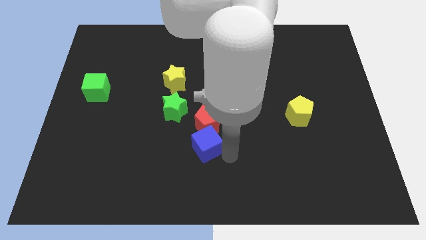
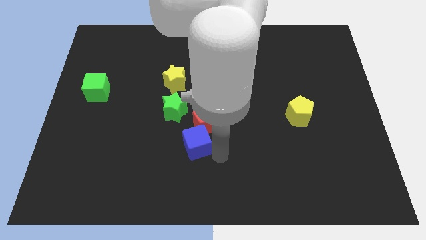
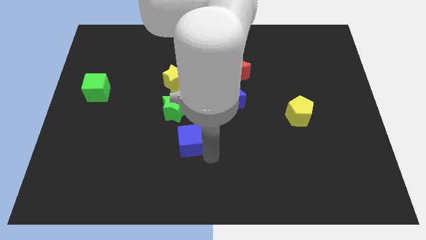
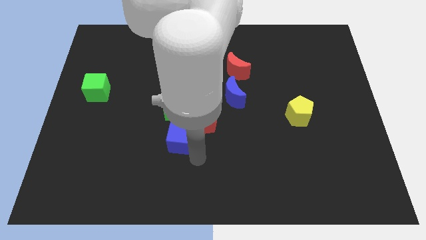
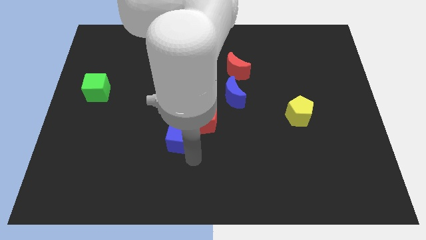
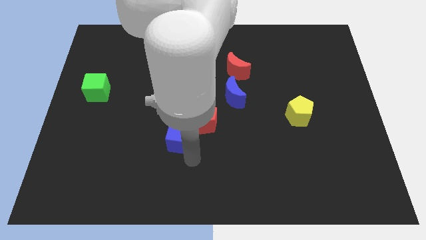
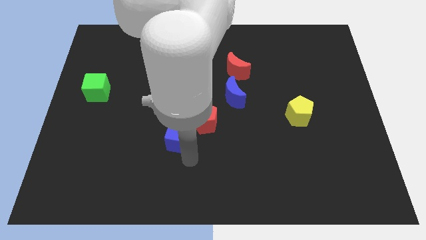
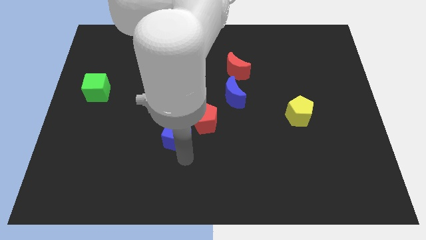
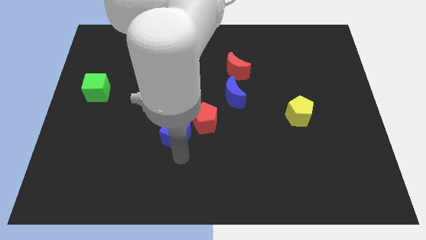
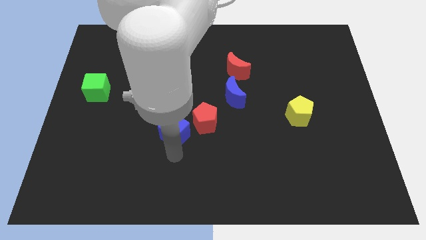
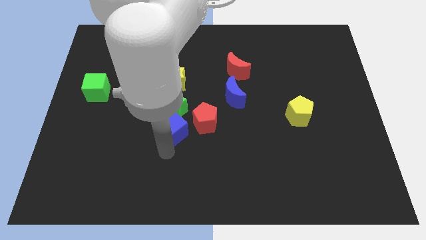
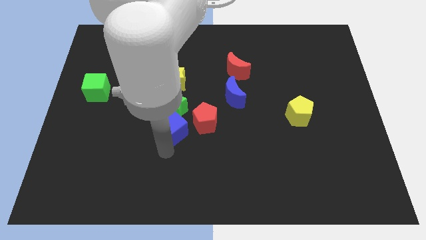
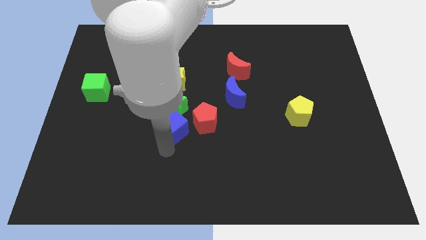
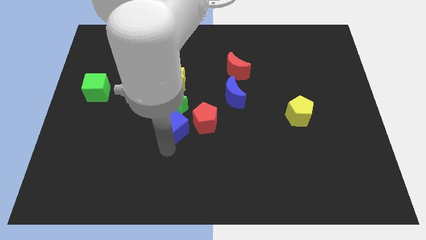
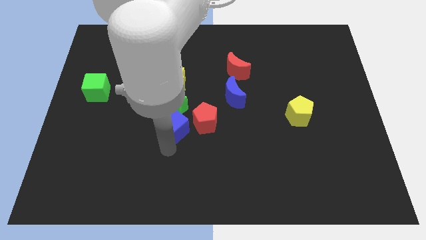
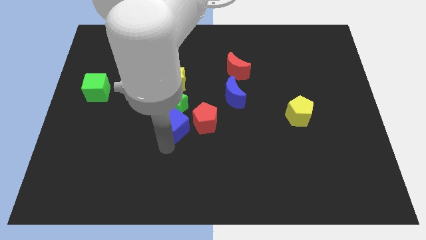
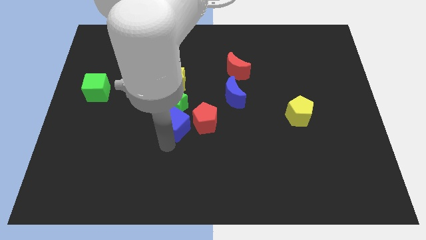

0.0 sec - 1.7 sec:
push the blue cube into the green star

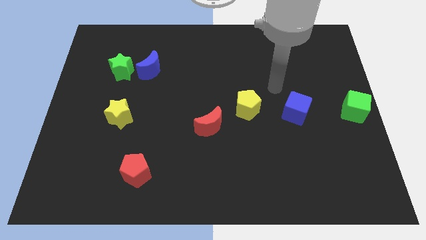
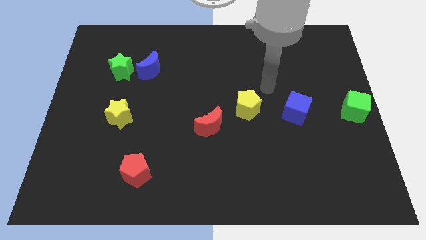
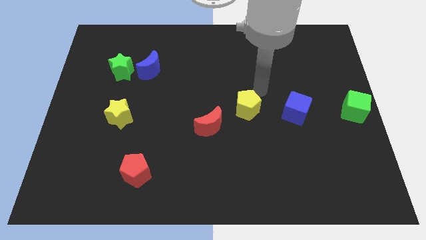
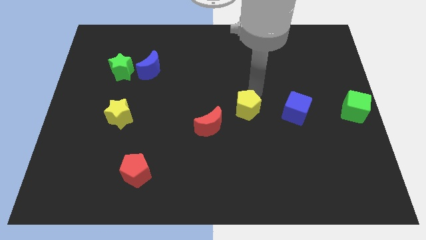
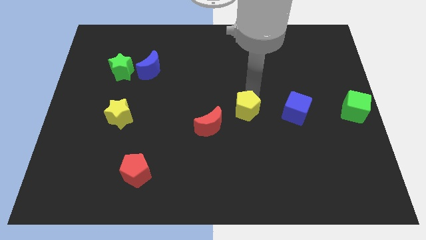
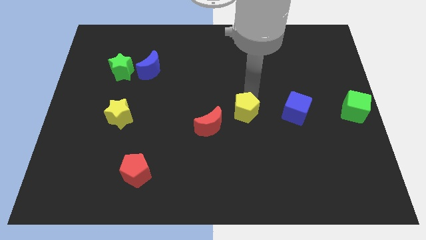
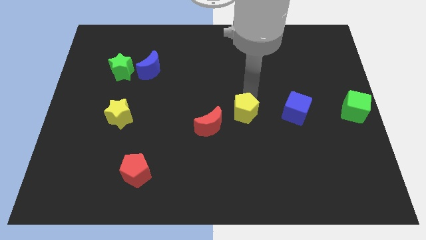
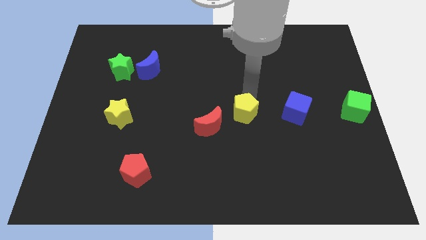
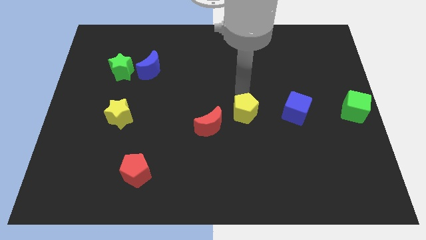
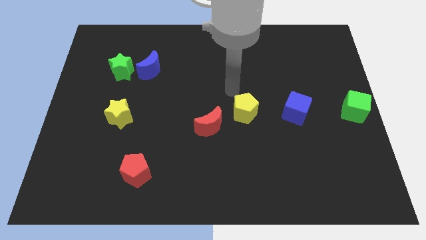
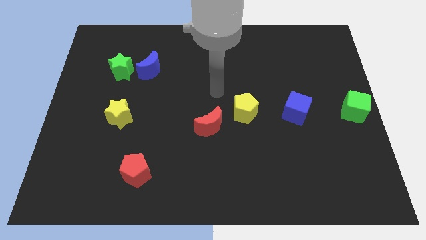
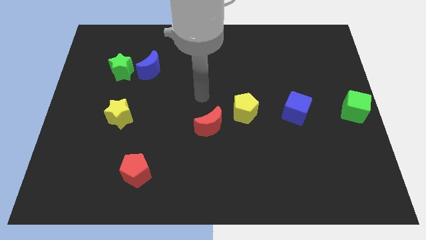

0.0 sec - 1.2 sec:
slightly push the yellow pentagon to the left of blue cube

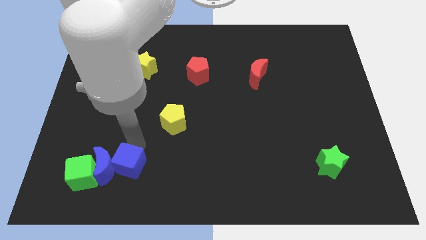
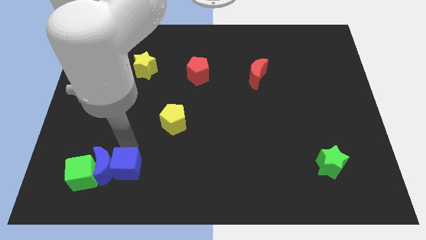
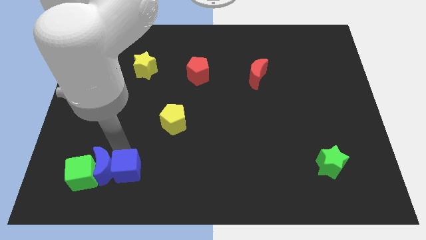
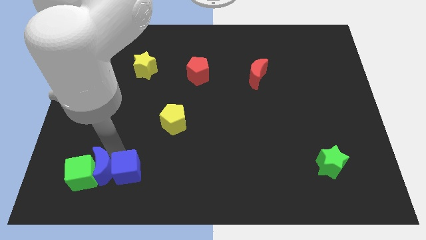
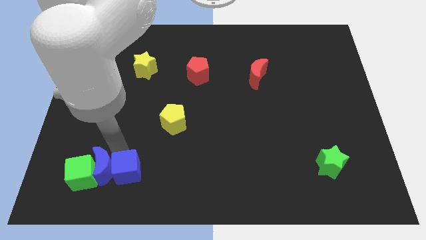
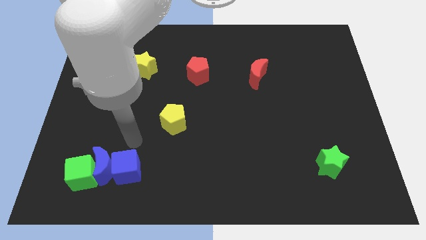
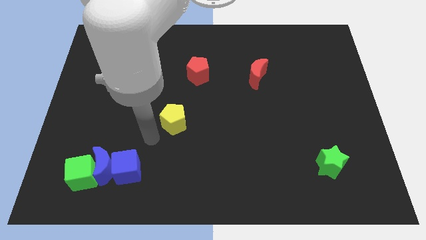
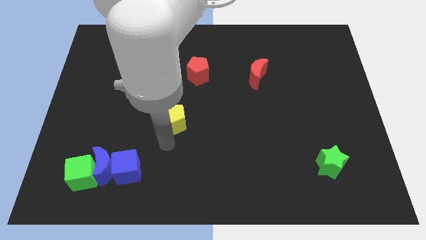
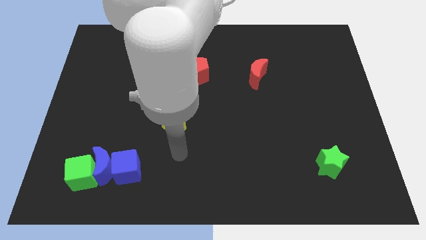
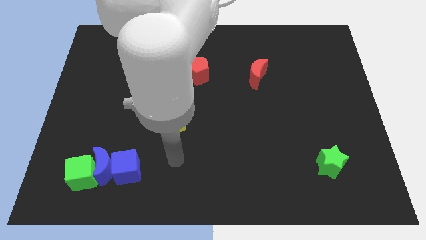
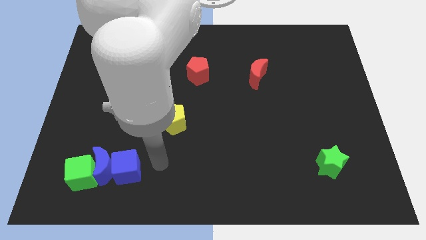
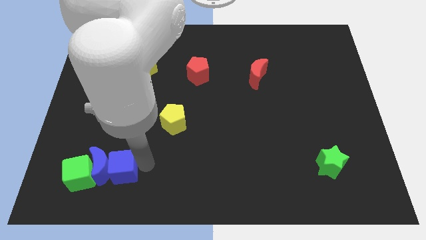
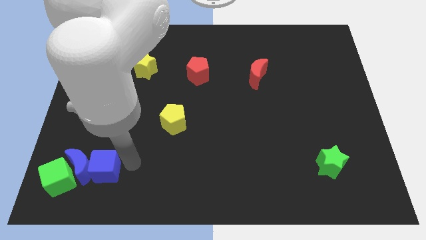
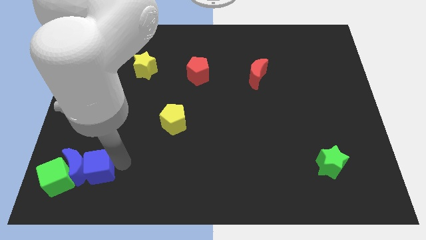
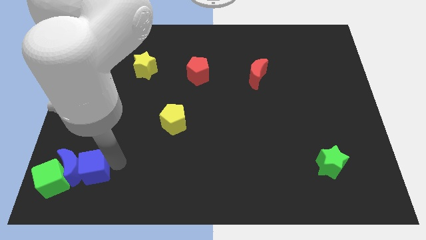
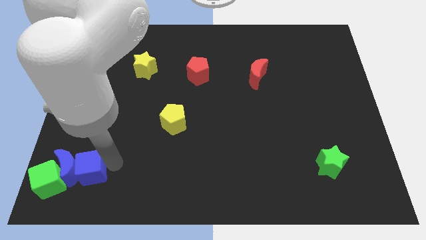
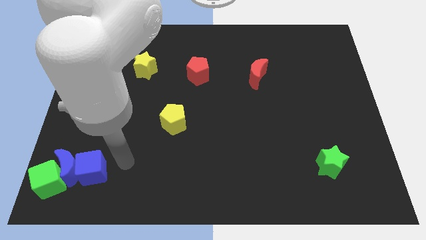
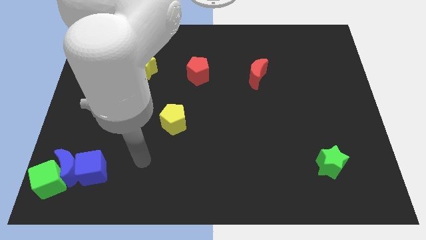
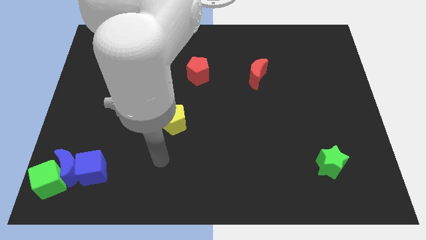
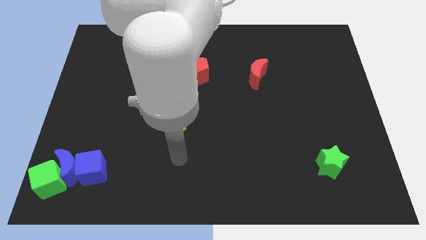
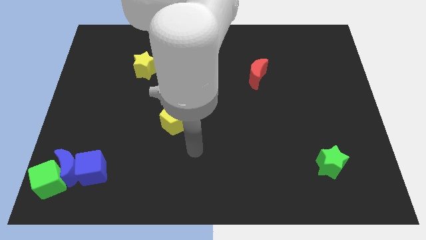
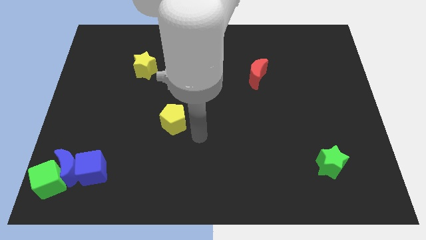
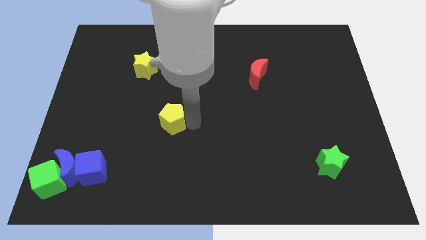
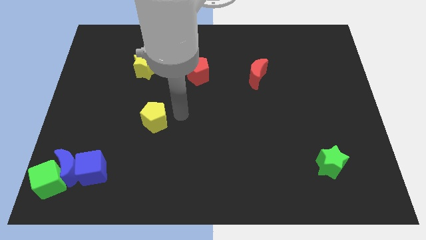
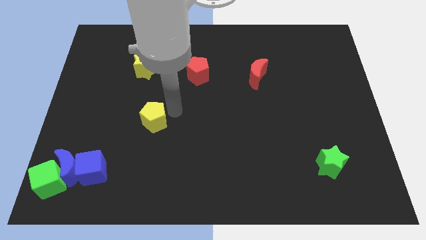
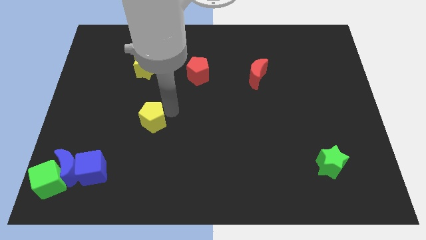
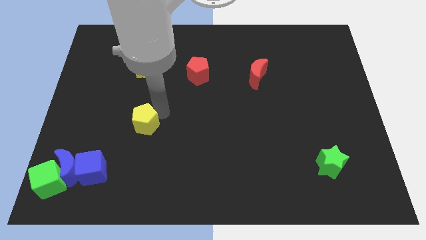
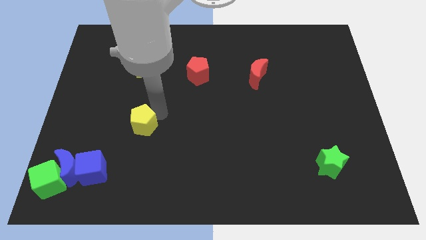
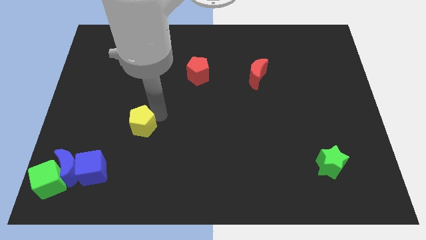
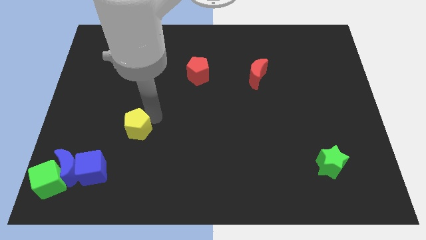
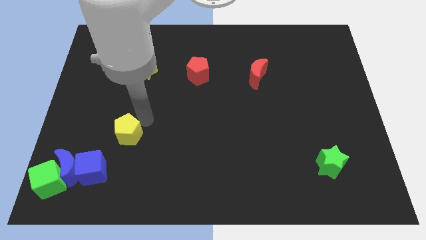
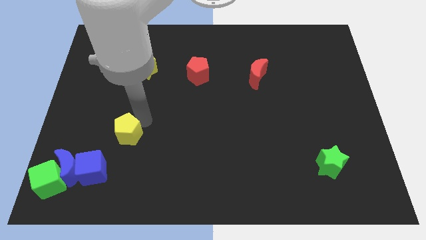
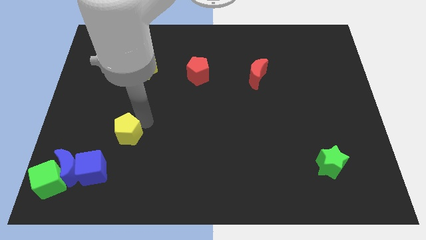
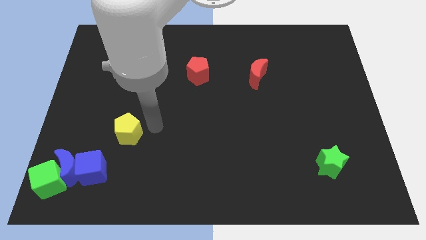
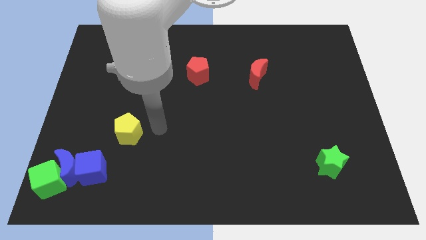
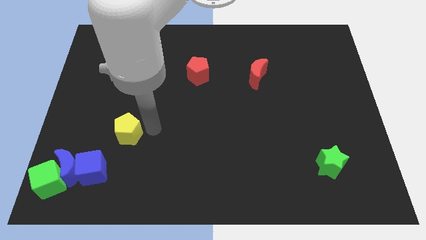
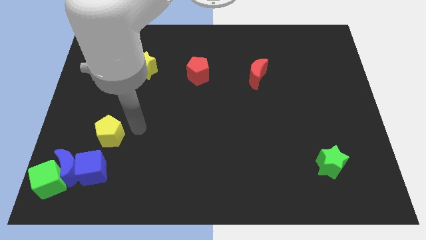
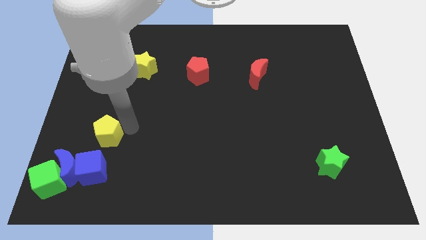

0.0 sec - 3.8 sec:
slide the blue blocks with green cube towards the bottom left corner

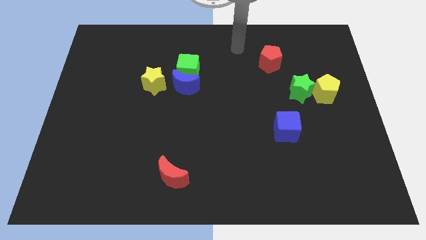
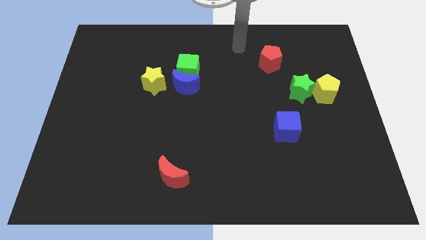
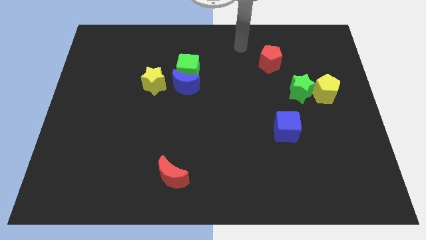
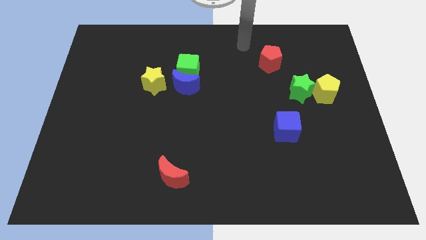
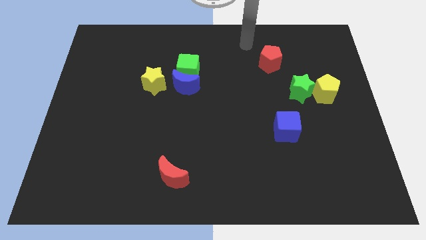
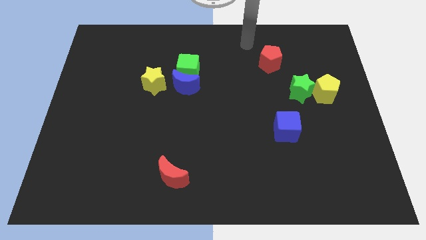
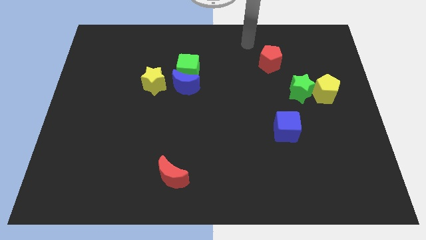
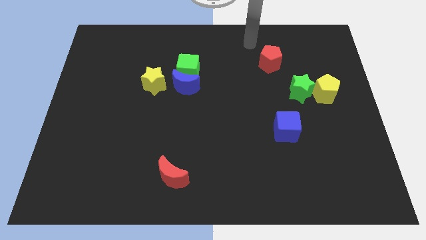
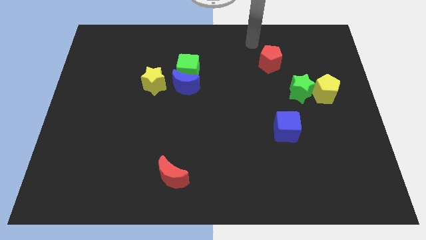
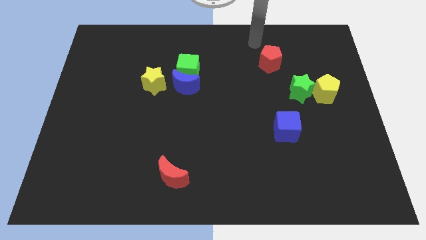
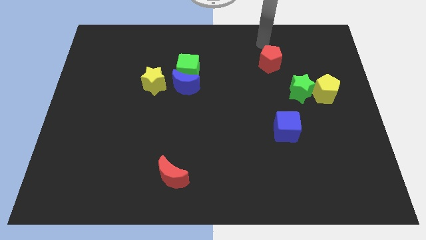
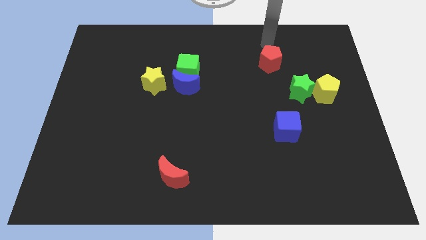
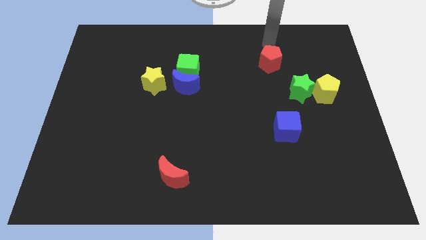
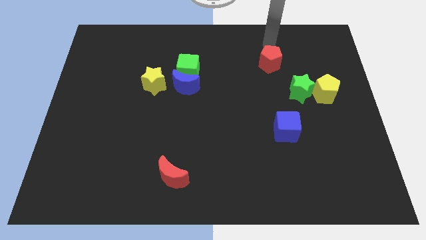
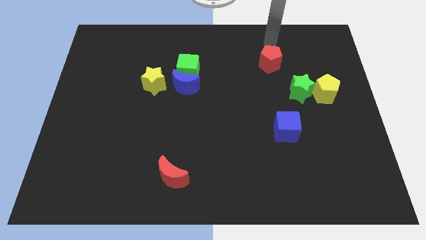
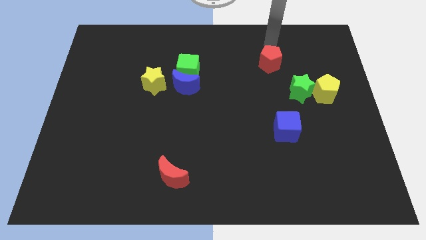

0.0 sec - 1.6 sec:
place arm above red pentagon

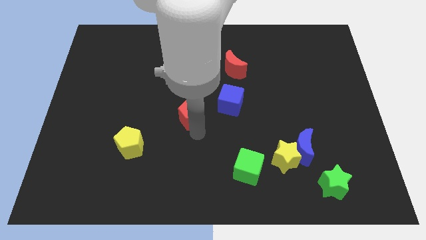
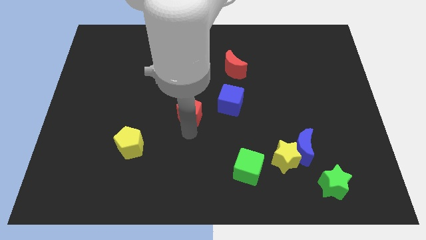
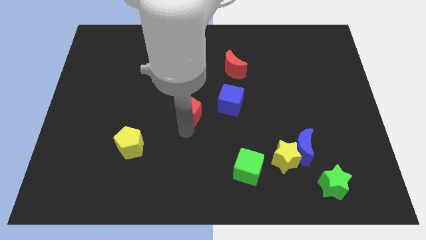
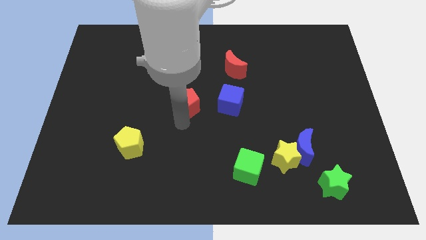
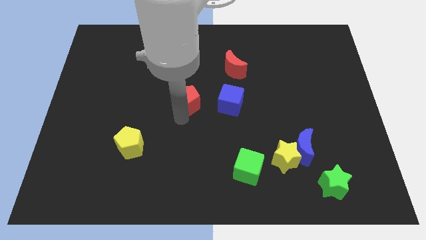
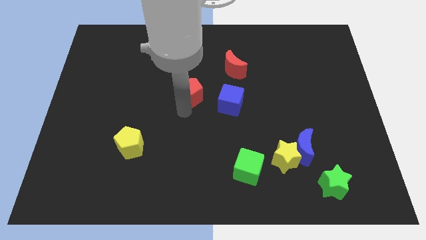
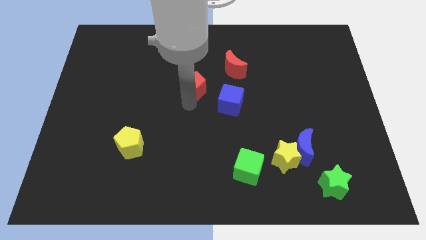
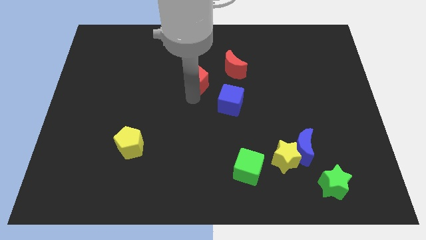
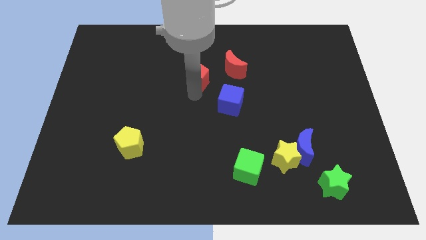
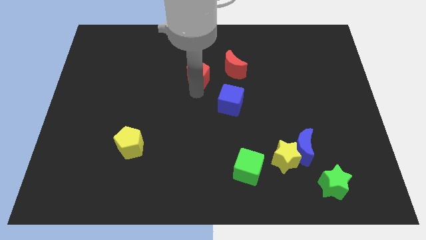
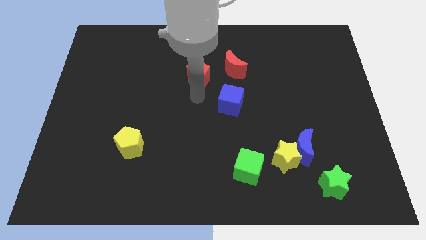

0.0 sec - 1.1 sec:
move the red pentagon slightly towards the top of the board
